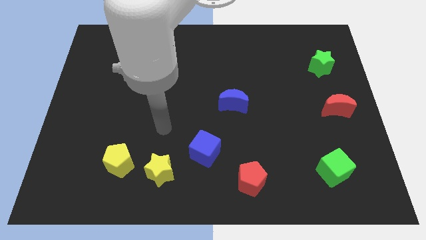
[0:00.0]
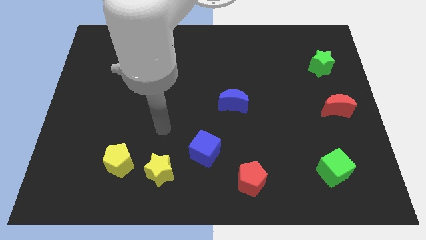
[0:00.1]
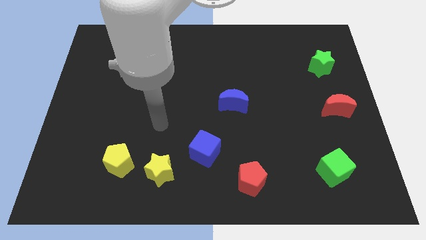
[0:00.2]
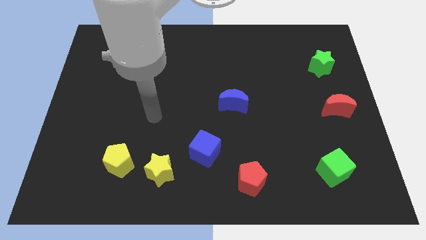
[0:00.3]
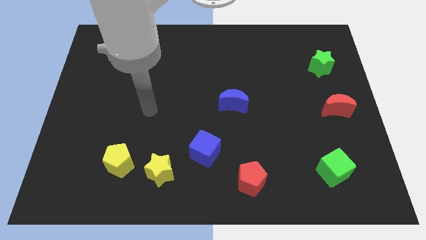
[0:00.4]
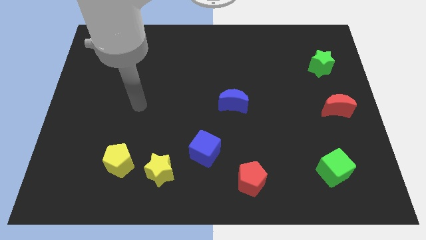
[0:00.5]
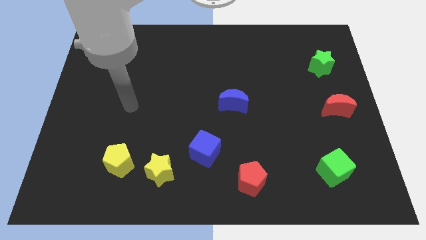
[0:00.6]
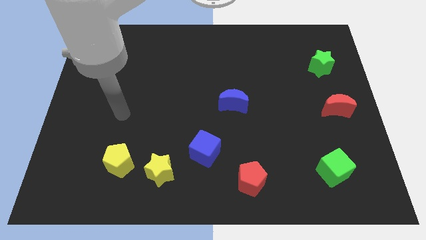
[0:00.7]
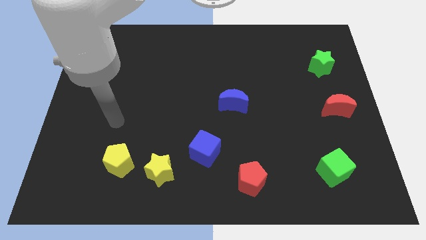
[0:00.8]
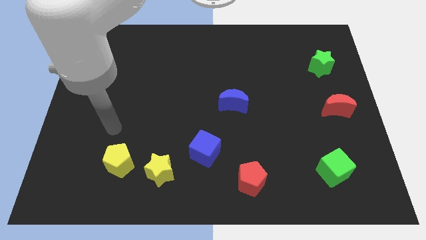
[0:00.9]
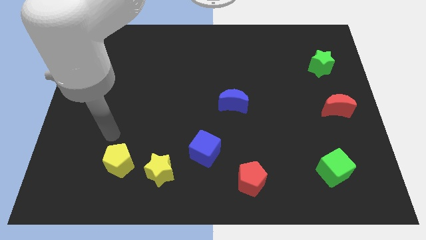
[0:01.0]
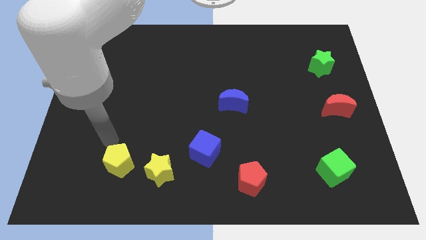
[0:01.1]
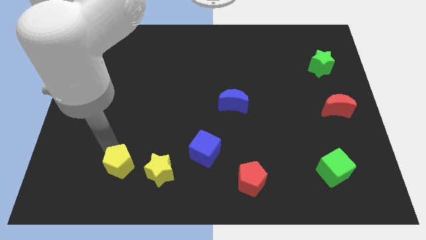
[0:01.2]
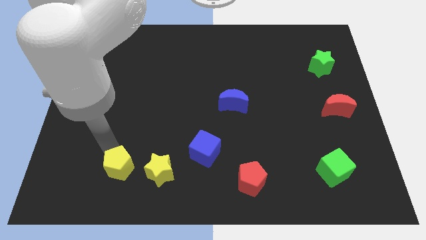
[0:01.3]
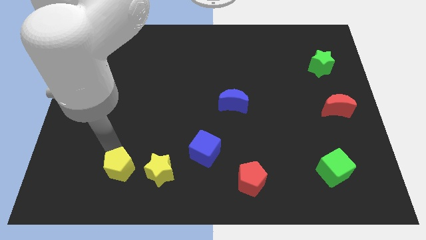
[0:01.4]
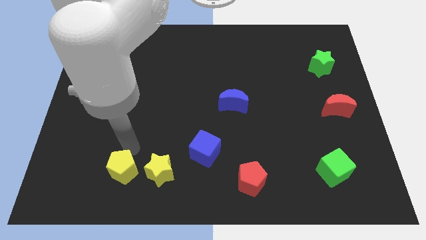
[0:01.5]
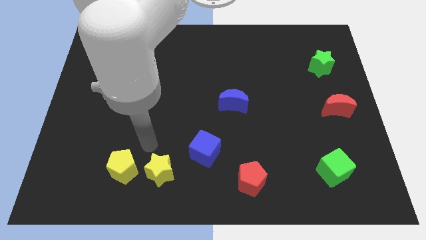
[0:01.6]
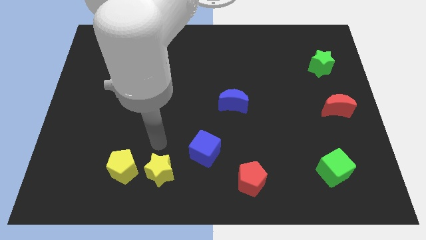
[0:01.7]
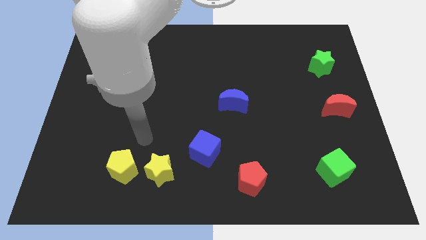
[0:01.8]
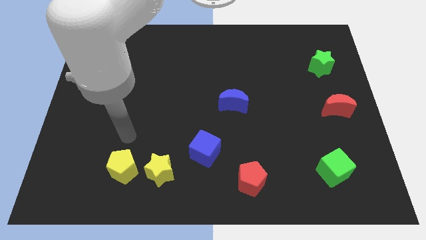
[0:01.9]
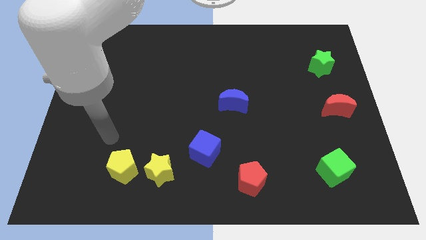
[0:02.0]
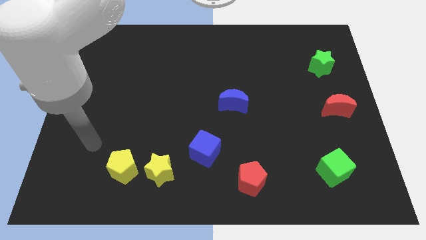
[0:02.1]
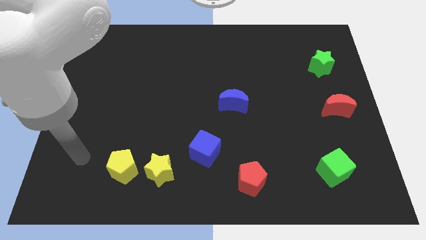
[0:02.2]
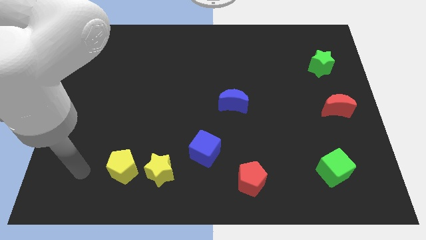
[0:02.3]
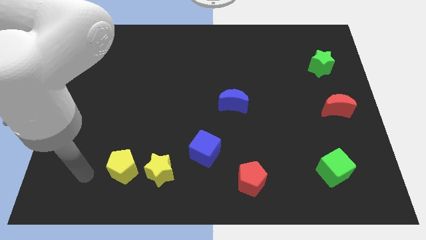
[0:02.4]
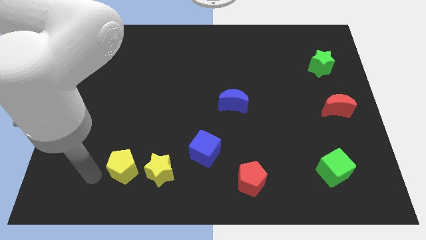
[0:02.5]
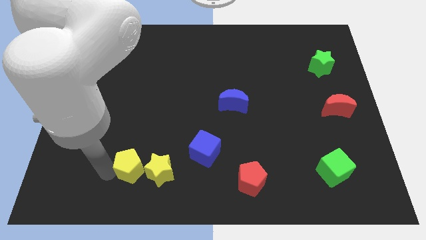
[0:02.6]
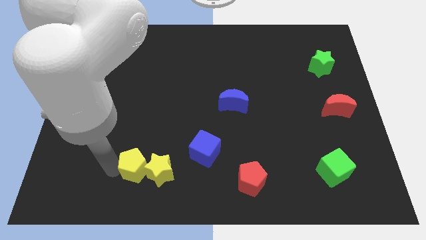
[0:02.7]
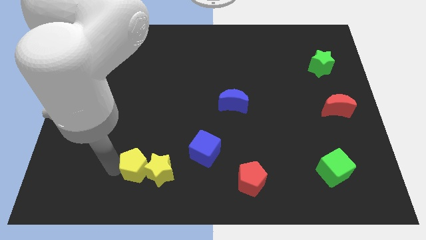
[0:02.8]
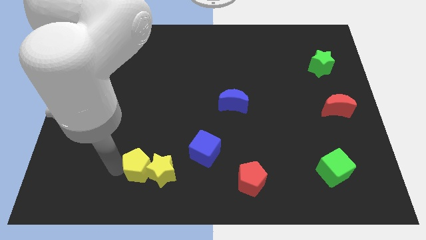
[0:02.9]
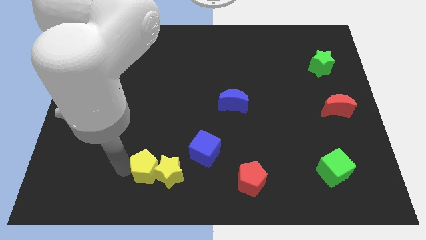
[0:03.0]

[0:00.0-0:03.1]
push the yellow pentagon into the yellow star

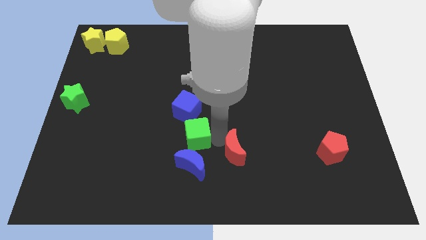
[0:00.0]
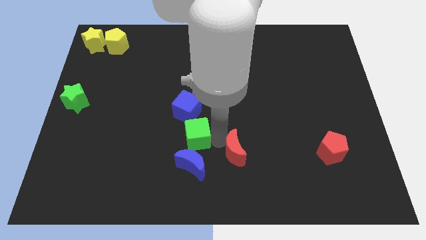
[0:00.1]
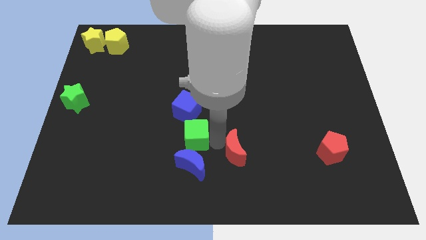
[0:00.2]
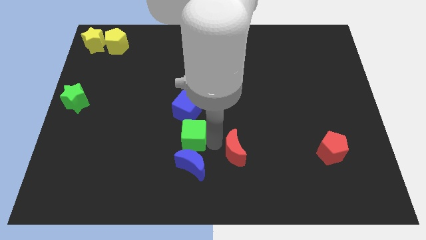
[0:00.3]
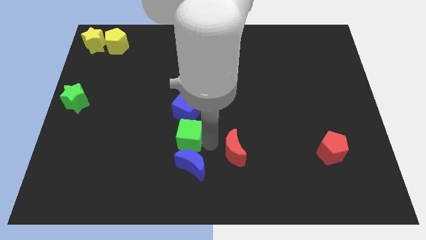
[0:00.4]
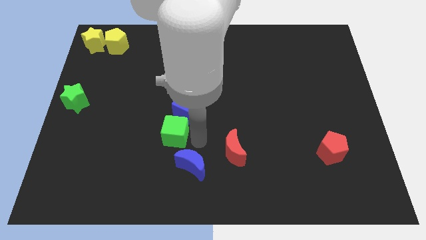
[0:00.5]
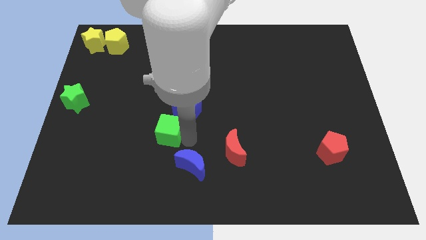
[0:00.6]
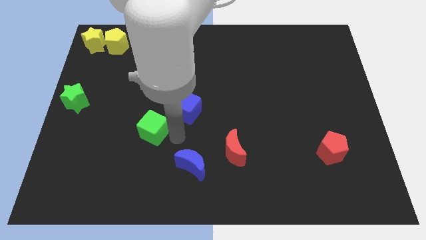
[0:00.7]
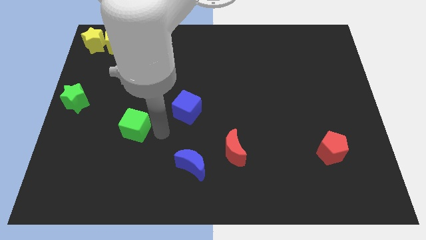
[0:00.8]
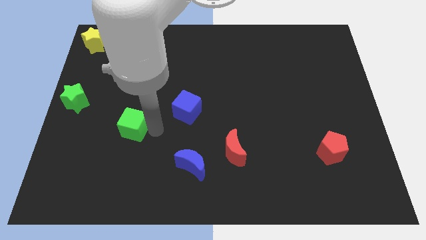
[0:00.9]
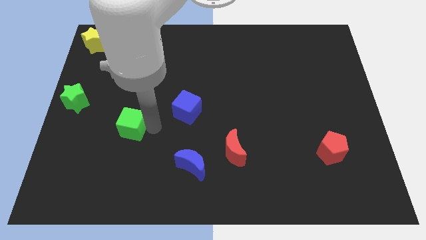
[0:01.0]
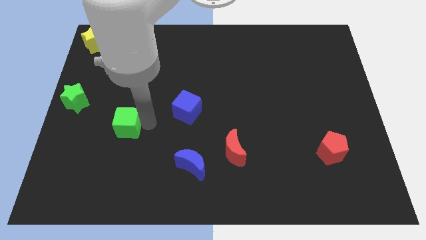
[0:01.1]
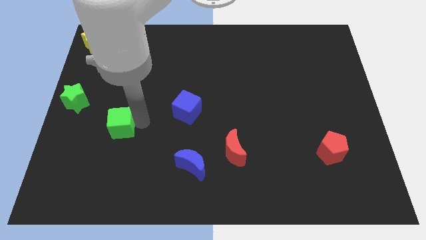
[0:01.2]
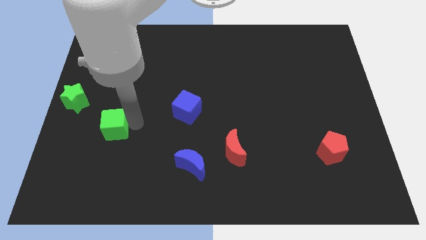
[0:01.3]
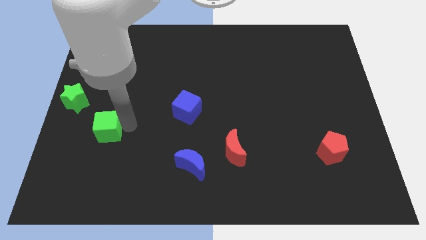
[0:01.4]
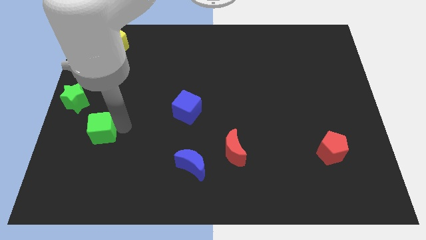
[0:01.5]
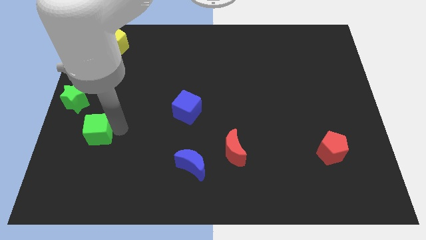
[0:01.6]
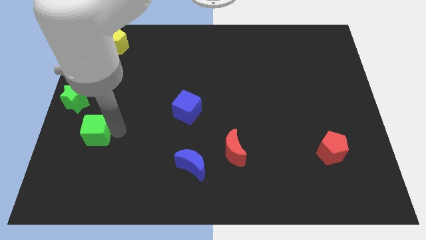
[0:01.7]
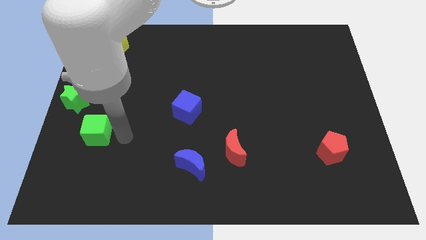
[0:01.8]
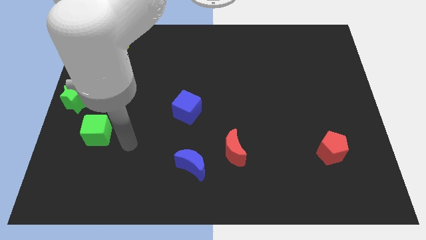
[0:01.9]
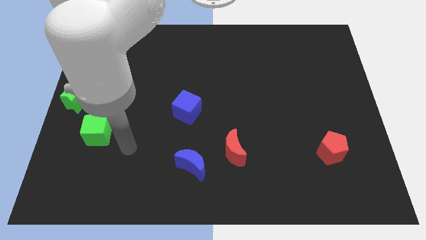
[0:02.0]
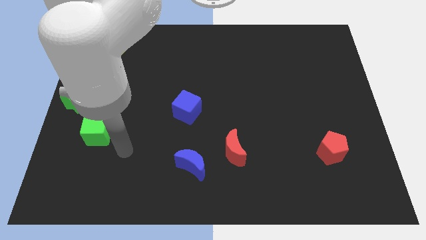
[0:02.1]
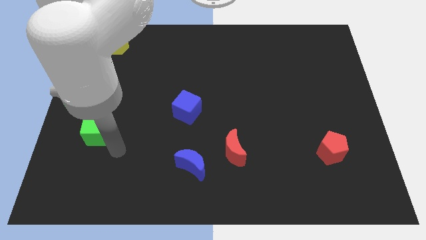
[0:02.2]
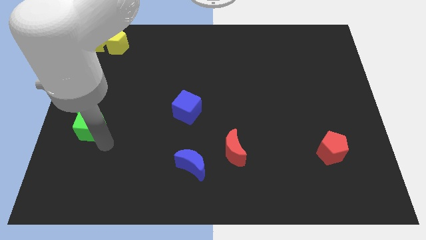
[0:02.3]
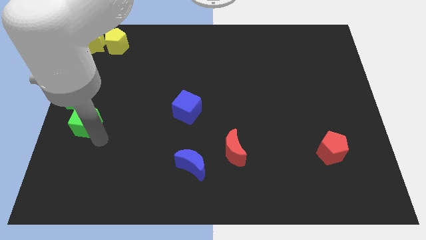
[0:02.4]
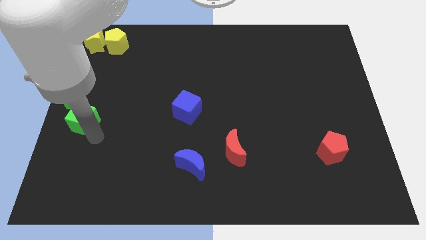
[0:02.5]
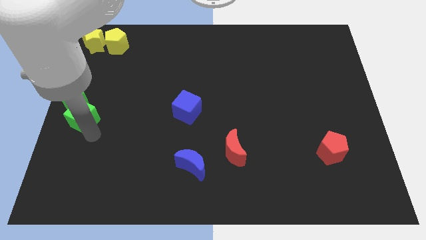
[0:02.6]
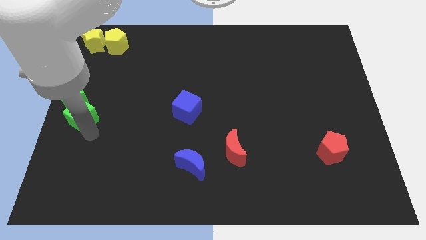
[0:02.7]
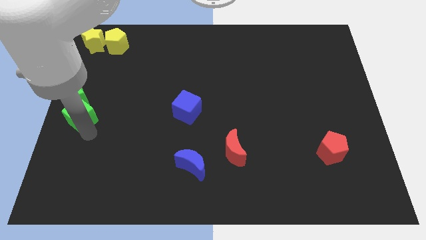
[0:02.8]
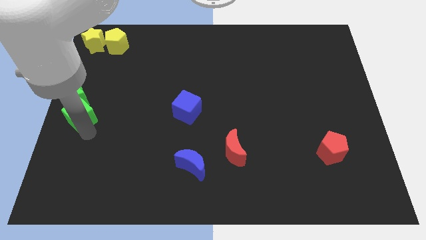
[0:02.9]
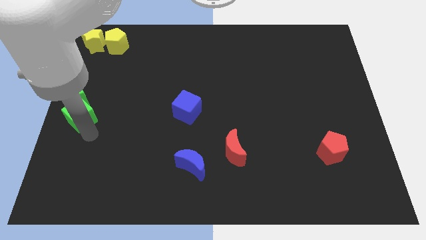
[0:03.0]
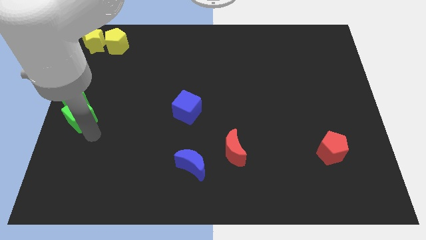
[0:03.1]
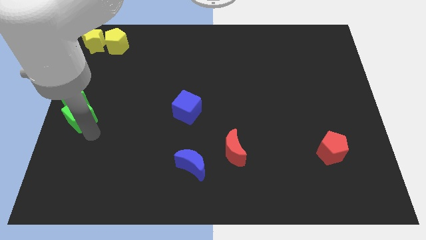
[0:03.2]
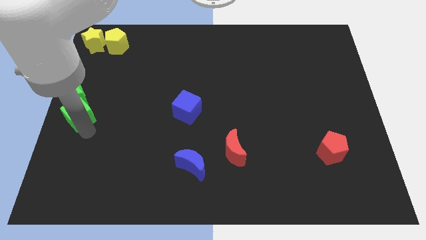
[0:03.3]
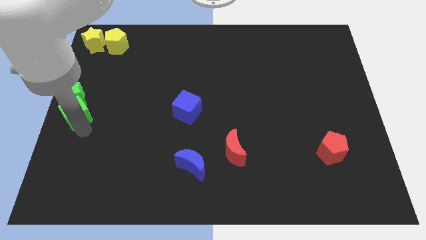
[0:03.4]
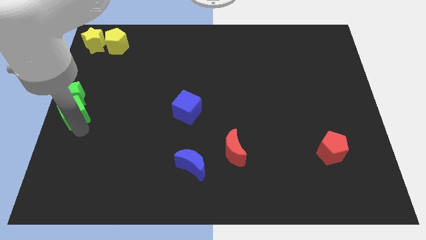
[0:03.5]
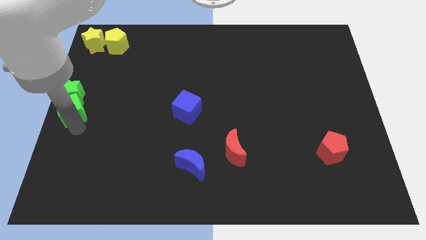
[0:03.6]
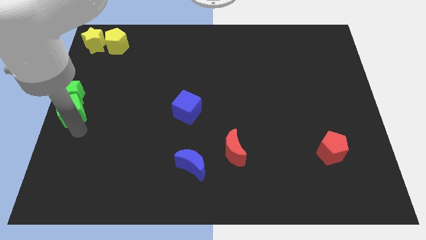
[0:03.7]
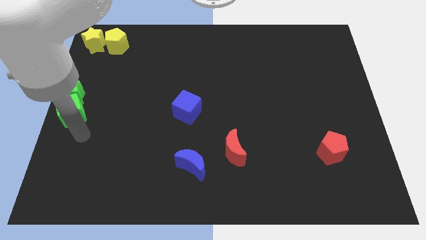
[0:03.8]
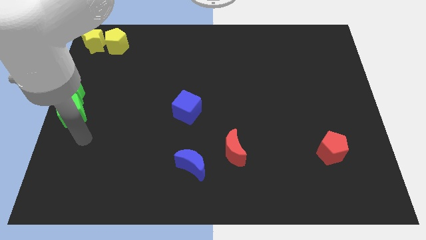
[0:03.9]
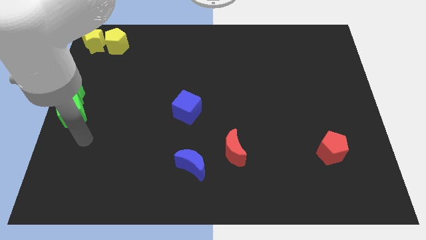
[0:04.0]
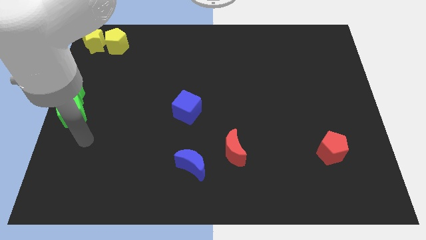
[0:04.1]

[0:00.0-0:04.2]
place green cube below to the green star

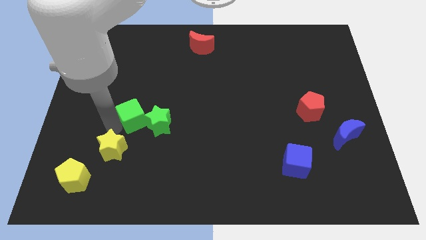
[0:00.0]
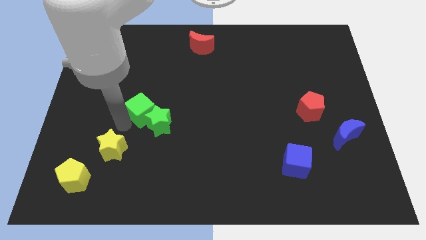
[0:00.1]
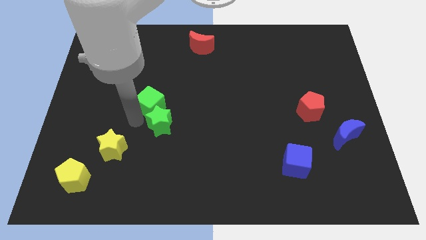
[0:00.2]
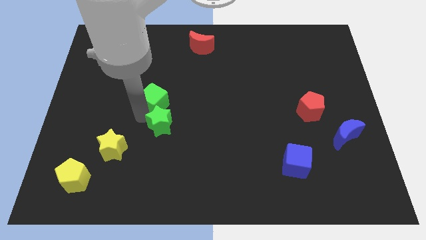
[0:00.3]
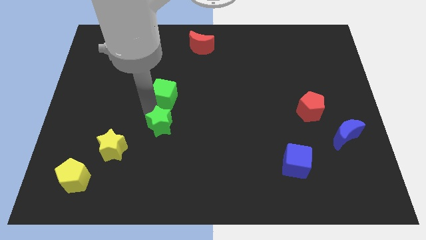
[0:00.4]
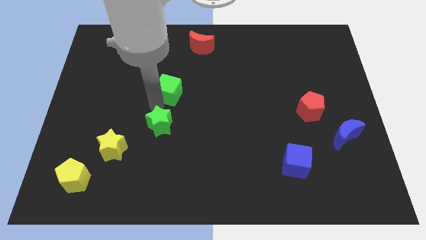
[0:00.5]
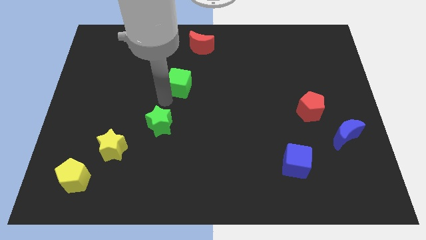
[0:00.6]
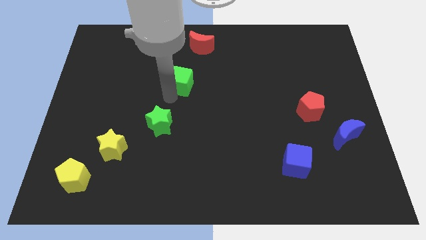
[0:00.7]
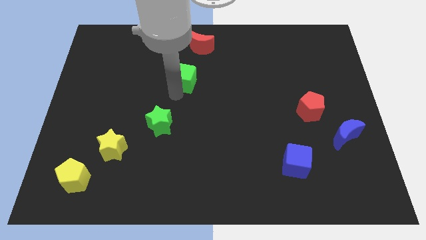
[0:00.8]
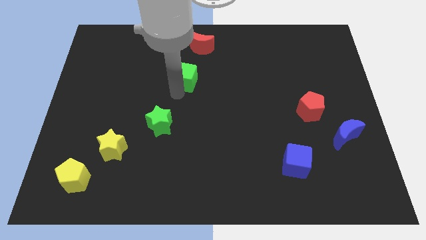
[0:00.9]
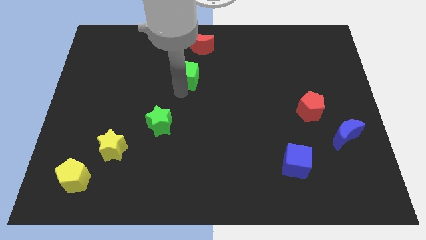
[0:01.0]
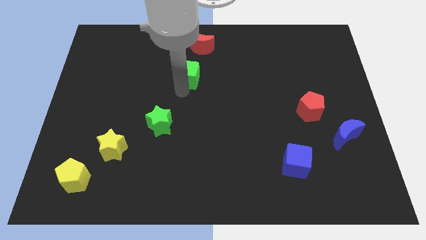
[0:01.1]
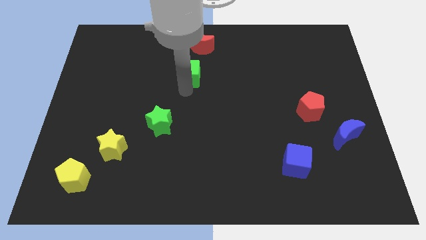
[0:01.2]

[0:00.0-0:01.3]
slide the green cube towards the red moon

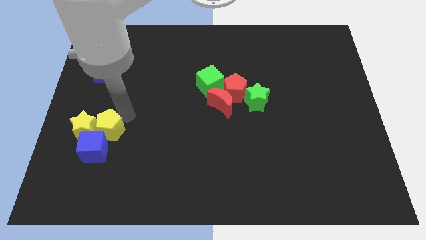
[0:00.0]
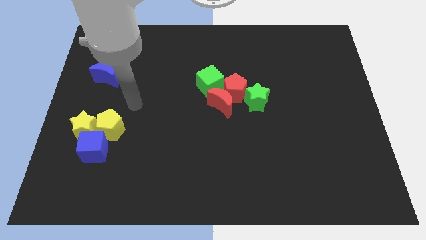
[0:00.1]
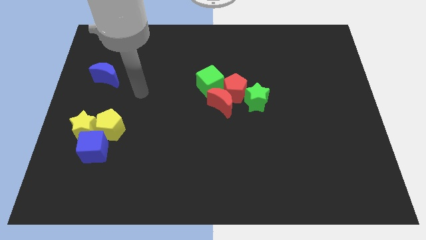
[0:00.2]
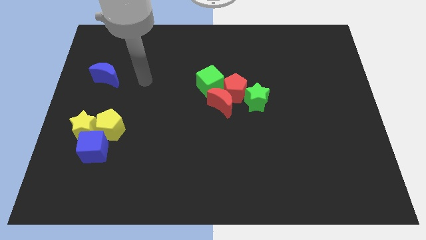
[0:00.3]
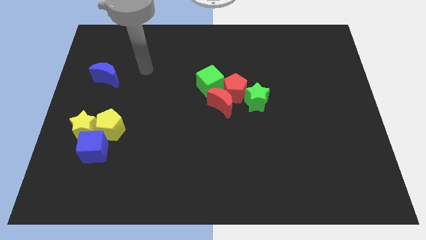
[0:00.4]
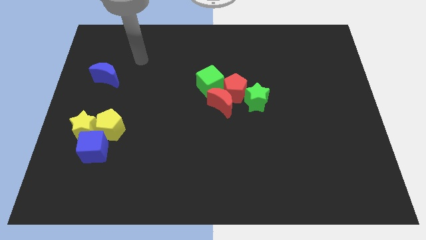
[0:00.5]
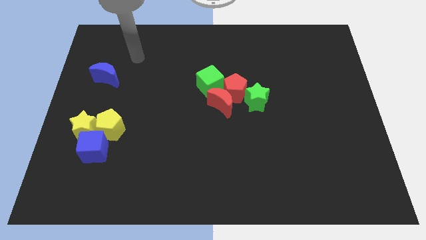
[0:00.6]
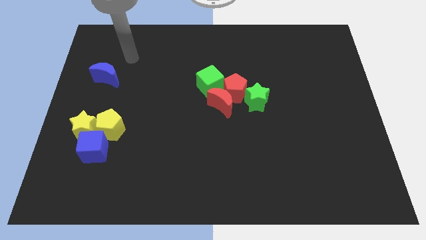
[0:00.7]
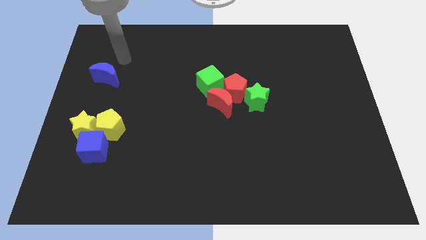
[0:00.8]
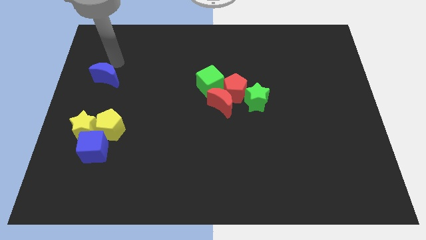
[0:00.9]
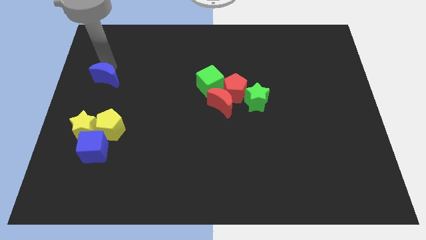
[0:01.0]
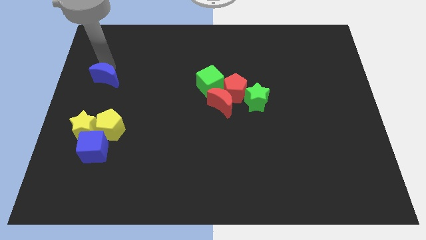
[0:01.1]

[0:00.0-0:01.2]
move your arm towards the blue crescent
